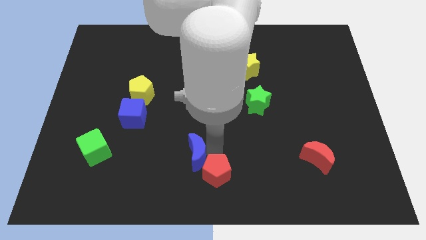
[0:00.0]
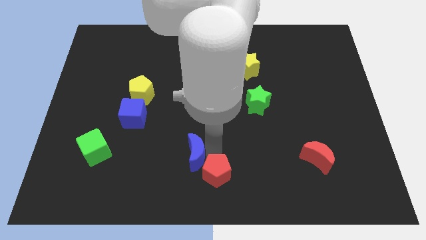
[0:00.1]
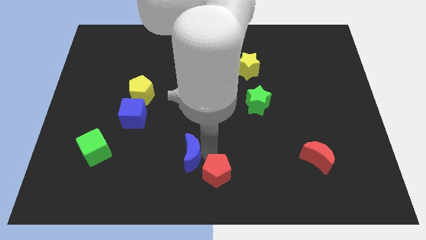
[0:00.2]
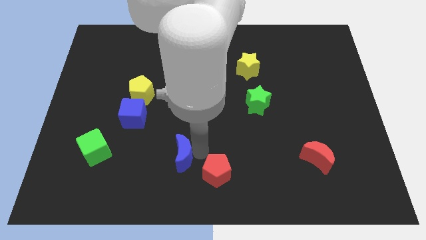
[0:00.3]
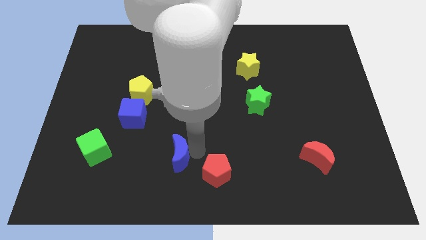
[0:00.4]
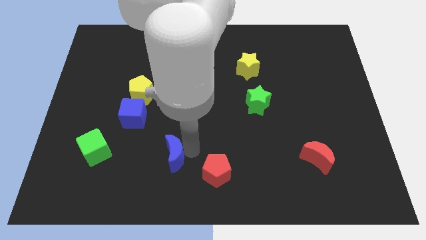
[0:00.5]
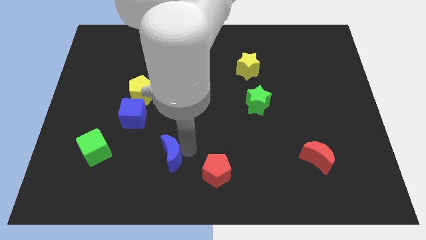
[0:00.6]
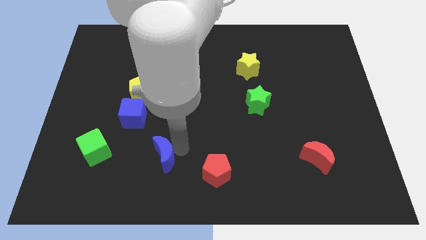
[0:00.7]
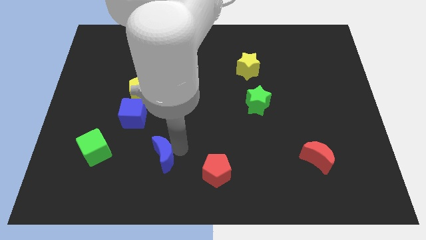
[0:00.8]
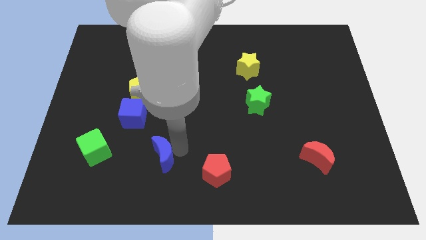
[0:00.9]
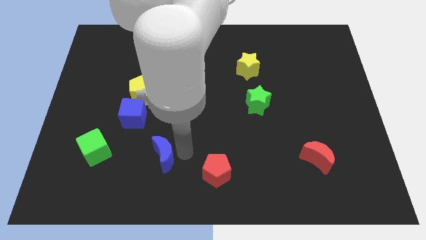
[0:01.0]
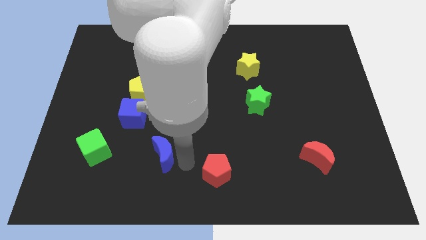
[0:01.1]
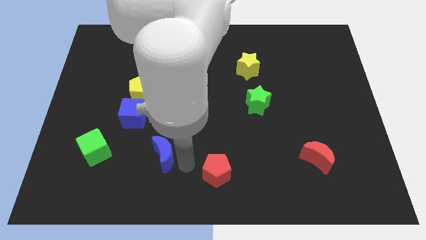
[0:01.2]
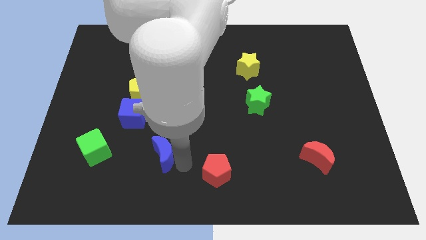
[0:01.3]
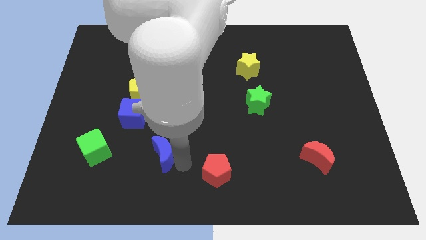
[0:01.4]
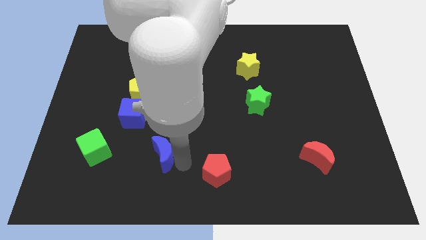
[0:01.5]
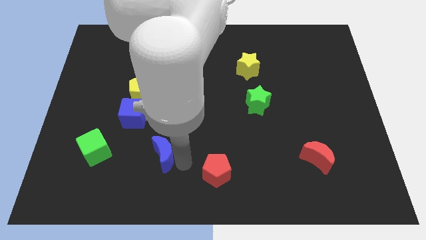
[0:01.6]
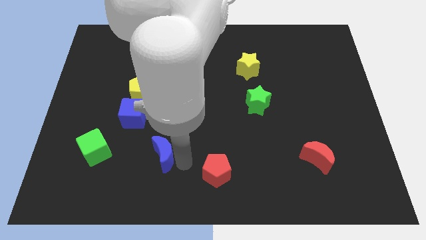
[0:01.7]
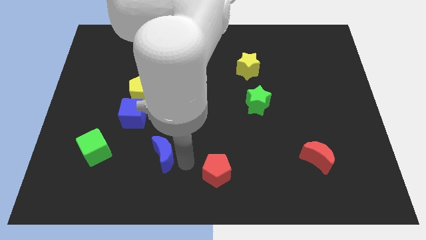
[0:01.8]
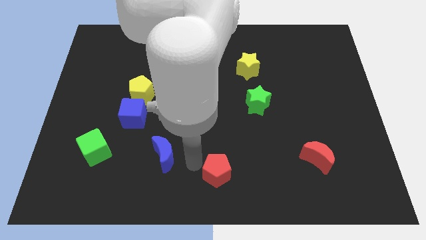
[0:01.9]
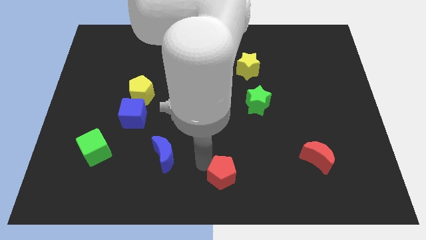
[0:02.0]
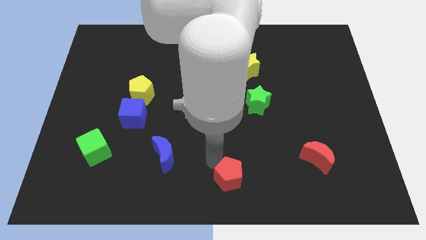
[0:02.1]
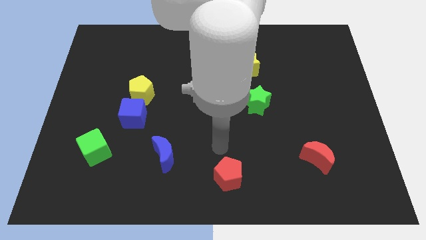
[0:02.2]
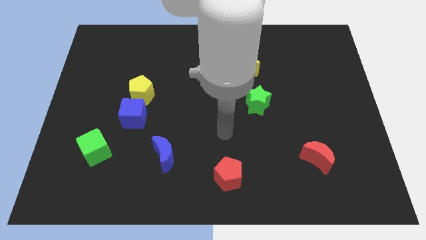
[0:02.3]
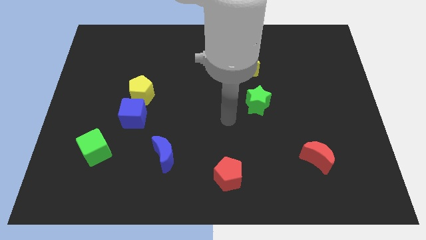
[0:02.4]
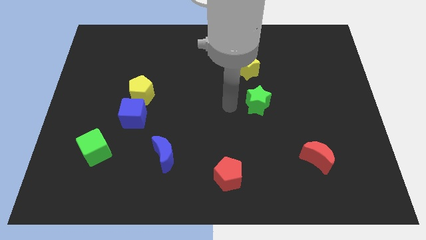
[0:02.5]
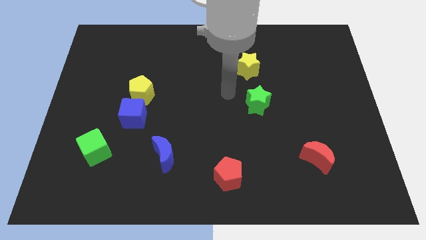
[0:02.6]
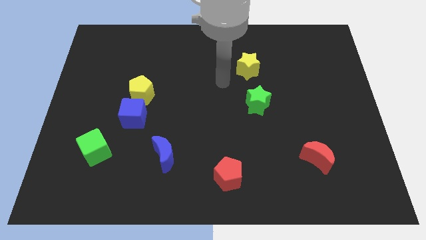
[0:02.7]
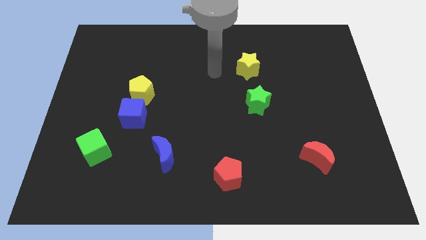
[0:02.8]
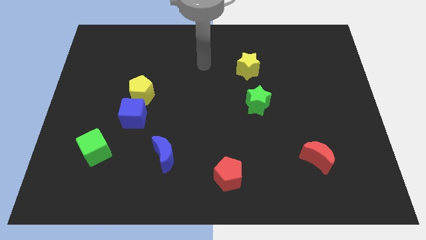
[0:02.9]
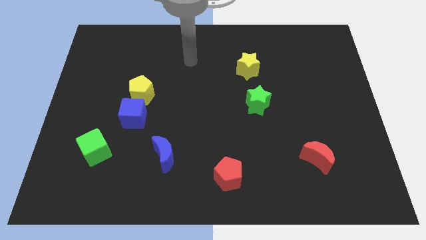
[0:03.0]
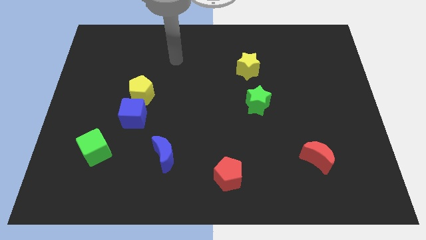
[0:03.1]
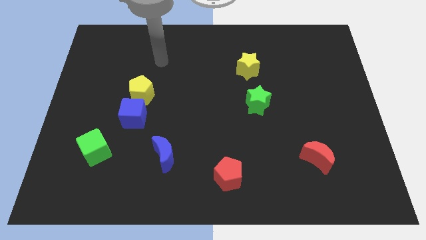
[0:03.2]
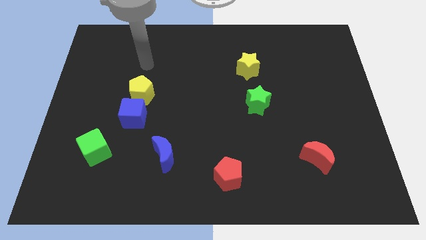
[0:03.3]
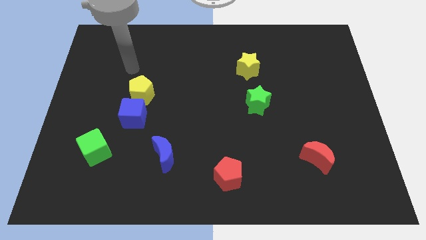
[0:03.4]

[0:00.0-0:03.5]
separate blue crescent from the red pentagon

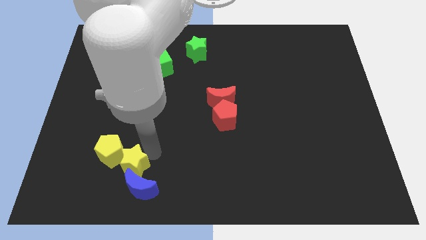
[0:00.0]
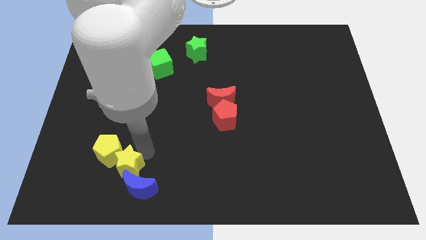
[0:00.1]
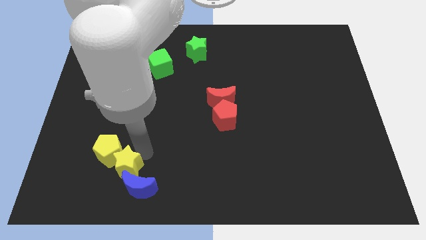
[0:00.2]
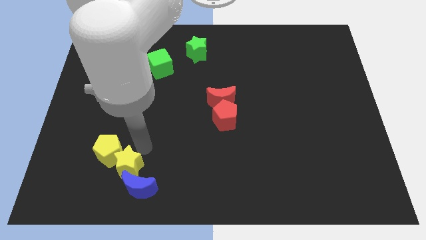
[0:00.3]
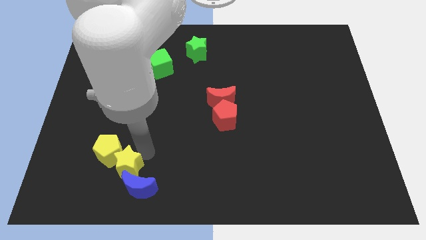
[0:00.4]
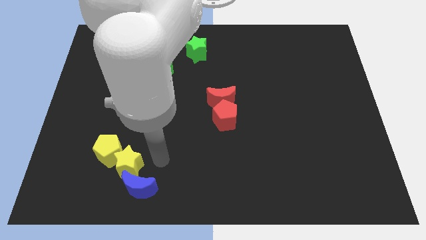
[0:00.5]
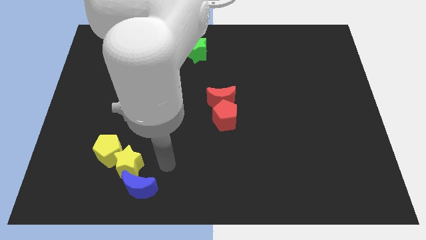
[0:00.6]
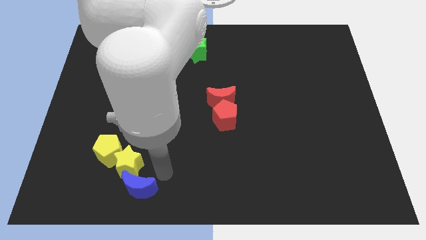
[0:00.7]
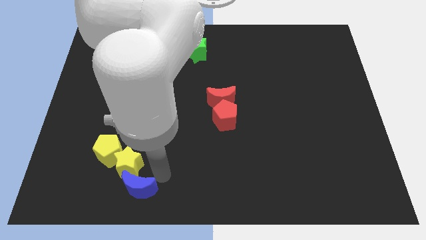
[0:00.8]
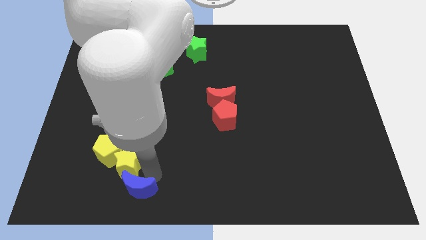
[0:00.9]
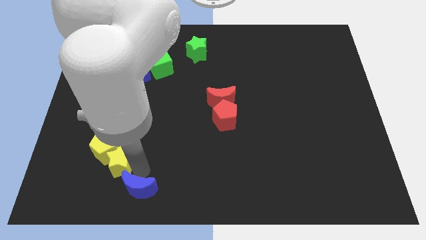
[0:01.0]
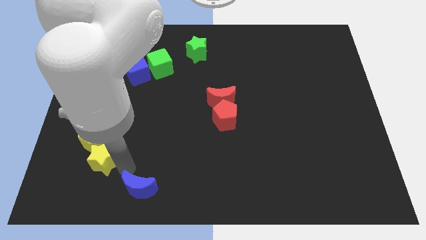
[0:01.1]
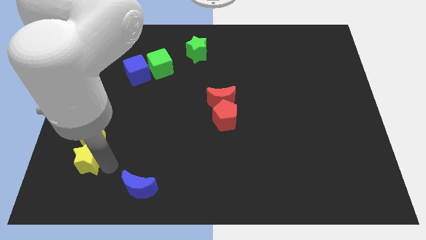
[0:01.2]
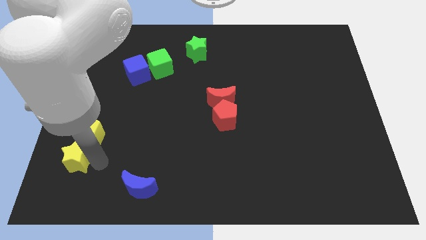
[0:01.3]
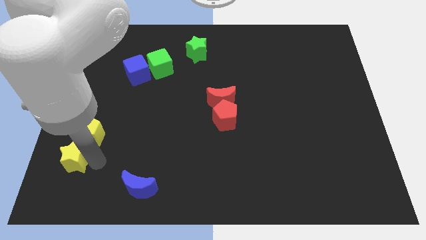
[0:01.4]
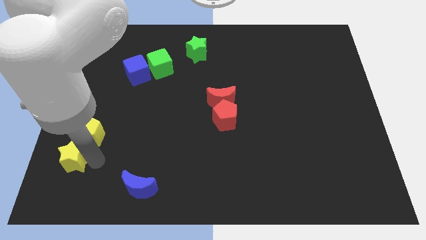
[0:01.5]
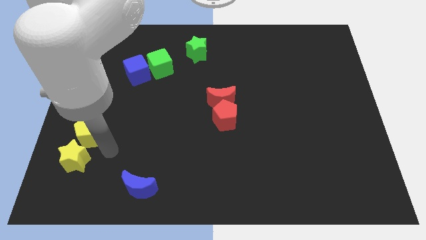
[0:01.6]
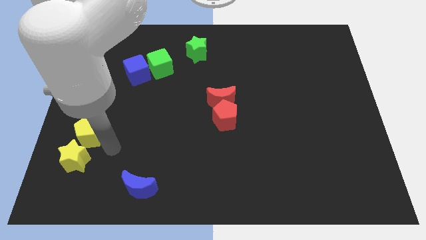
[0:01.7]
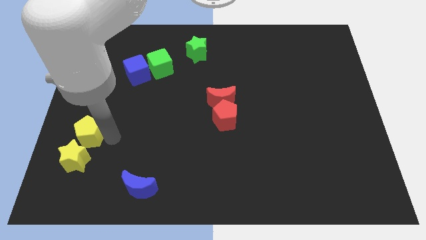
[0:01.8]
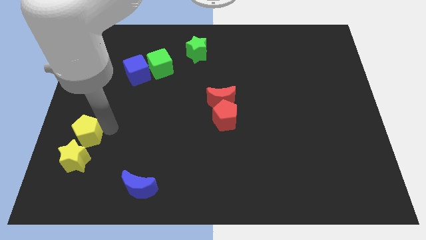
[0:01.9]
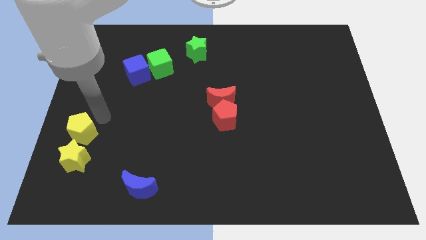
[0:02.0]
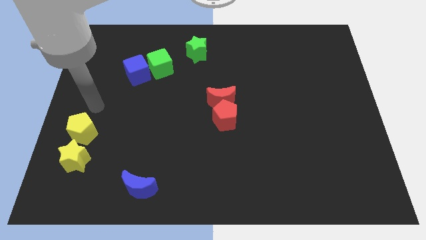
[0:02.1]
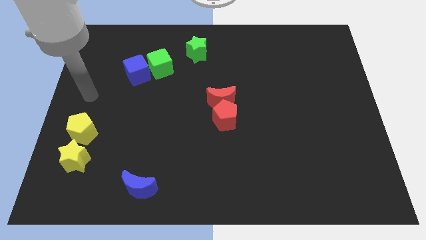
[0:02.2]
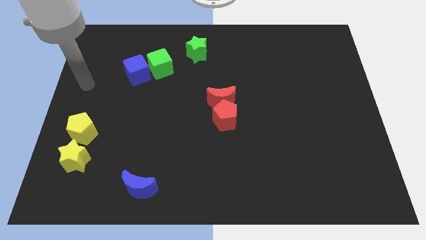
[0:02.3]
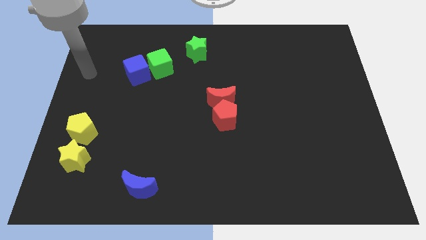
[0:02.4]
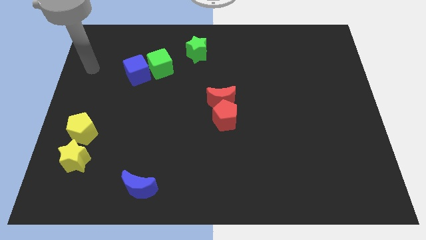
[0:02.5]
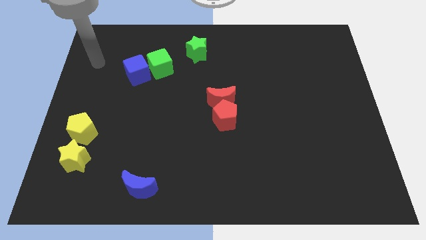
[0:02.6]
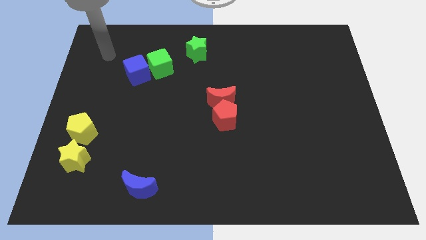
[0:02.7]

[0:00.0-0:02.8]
push the yellow star into the yellow pentagon

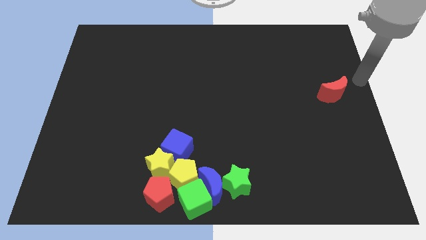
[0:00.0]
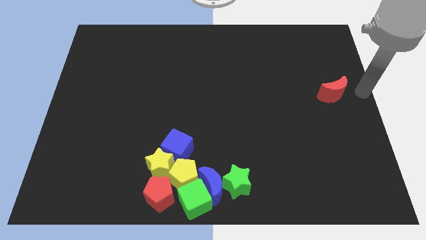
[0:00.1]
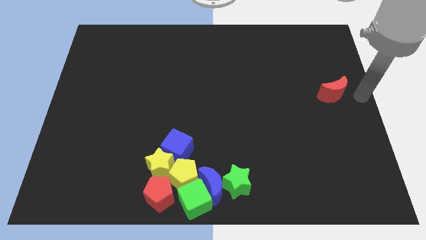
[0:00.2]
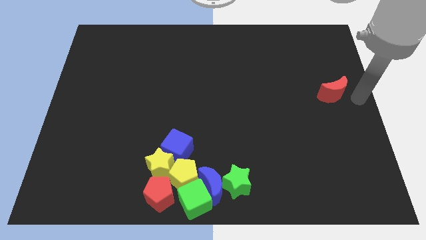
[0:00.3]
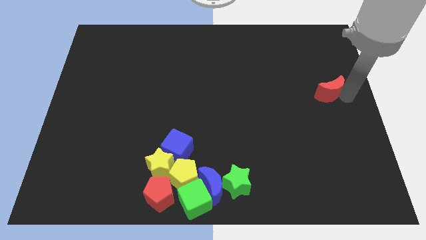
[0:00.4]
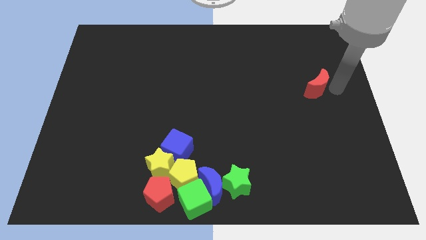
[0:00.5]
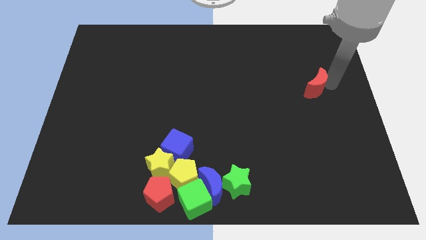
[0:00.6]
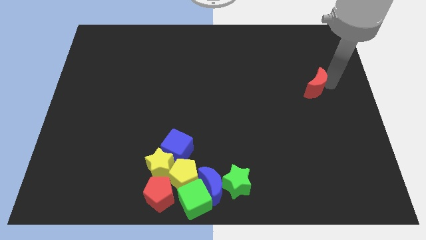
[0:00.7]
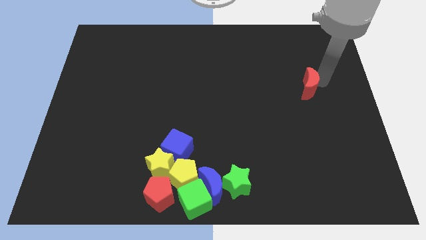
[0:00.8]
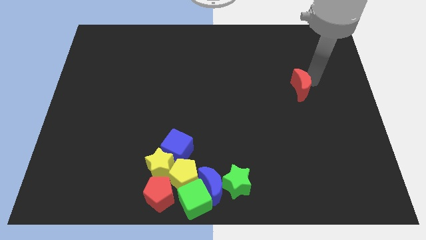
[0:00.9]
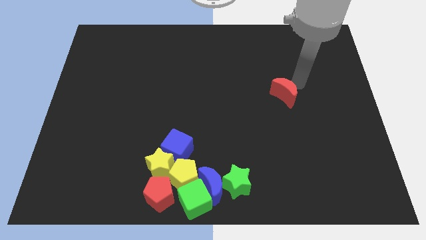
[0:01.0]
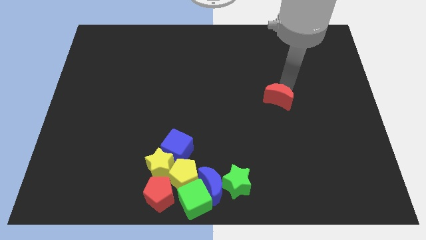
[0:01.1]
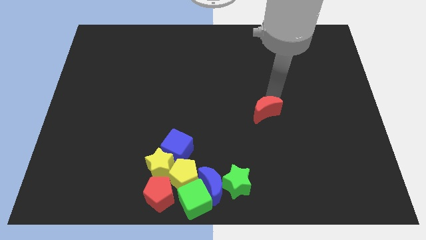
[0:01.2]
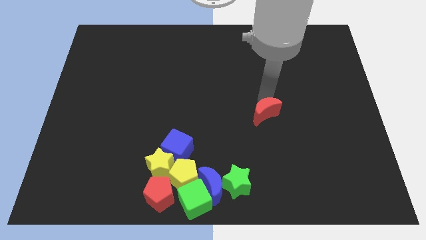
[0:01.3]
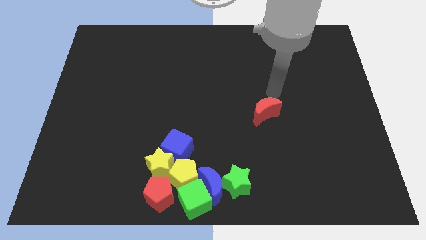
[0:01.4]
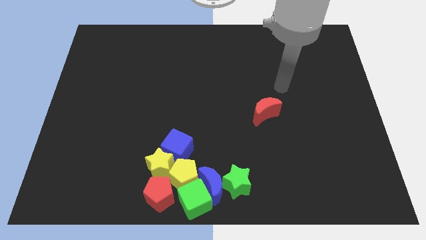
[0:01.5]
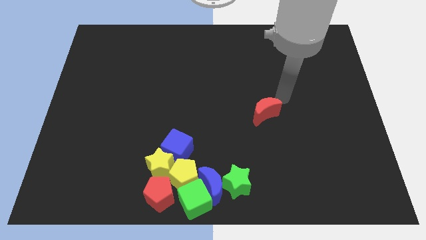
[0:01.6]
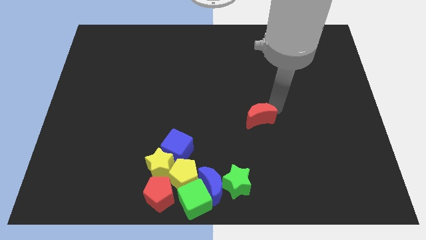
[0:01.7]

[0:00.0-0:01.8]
slide the red moon downwards

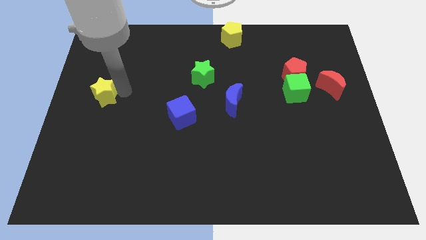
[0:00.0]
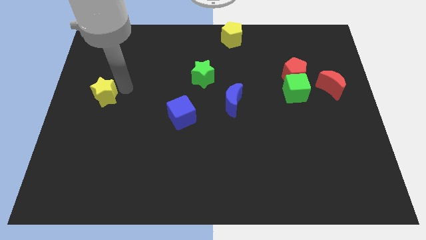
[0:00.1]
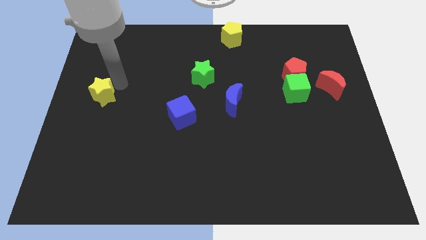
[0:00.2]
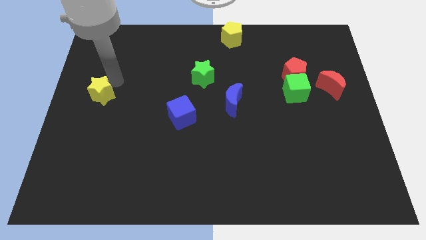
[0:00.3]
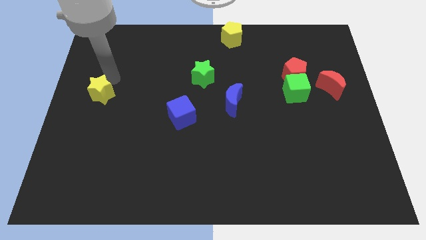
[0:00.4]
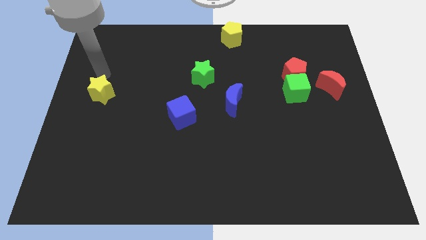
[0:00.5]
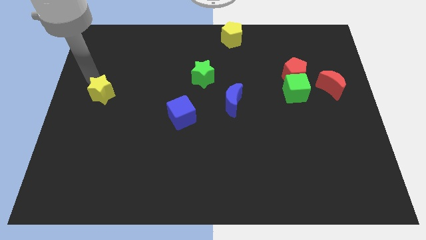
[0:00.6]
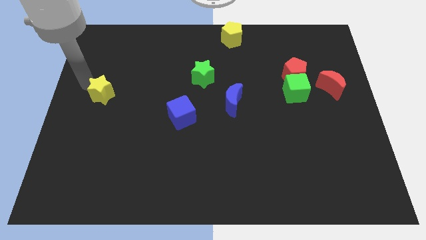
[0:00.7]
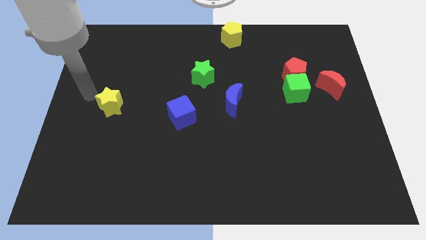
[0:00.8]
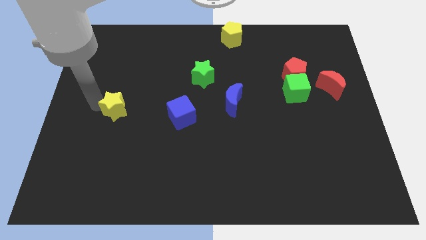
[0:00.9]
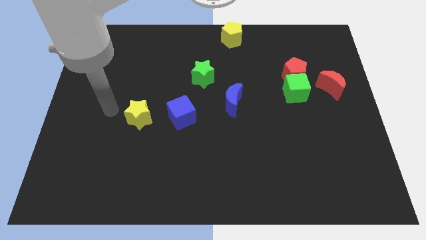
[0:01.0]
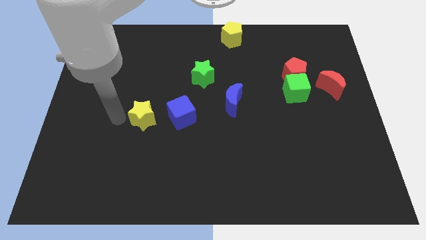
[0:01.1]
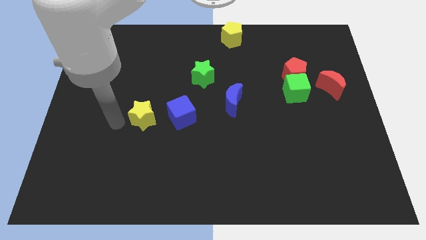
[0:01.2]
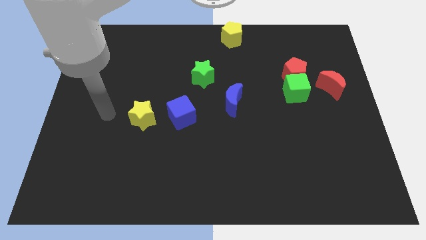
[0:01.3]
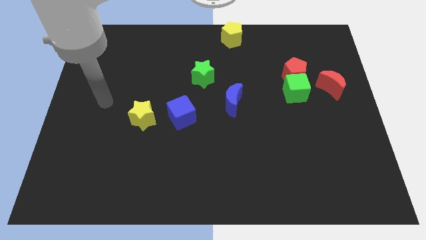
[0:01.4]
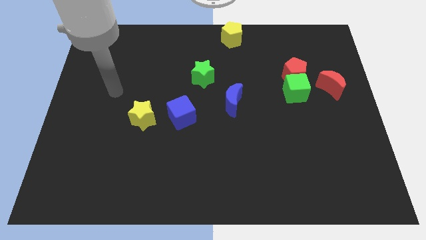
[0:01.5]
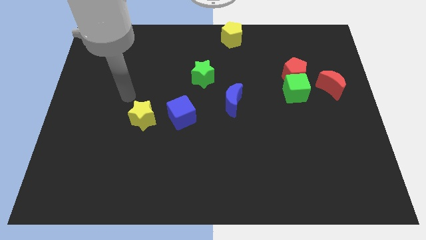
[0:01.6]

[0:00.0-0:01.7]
move the yellow star left to the blue cube
